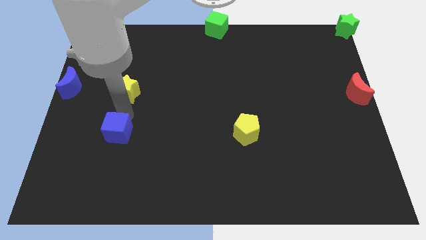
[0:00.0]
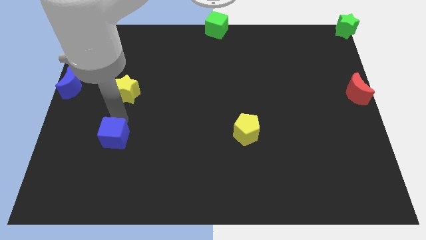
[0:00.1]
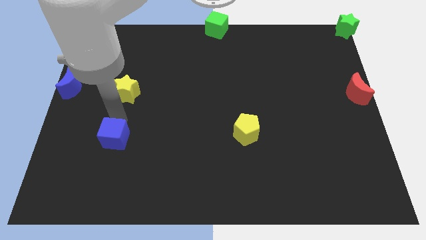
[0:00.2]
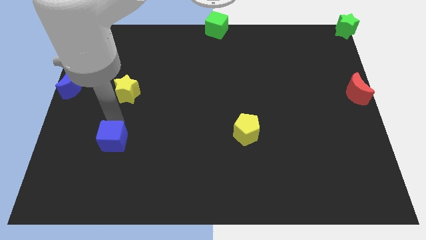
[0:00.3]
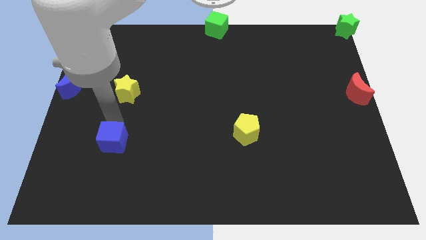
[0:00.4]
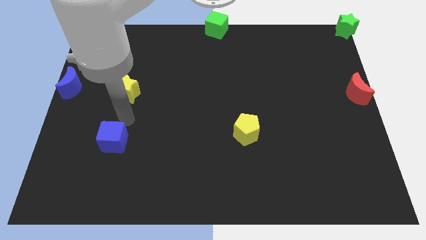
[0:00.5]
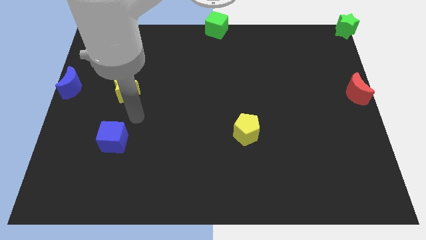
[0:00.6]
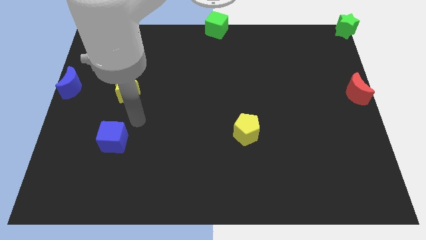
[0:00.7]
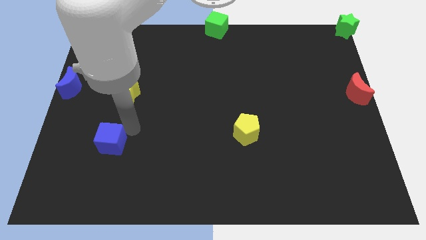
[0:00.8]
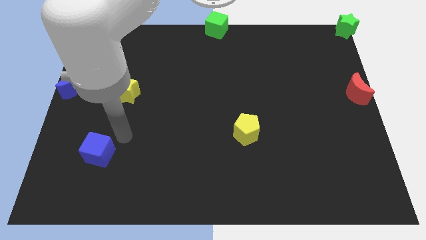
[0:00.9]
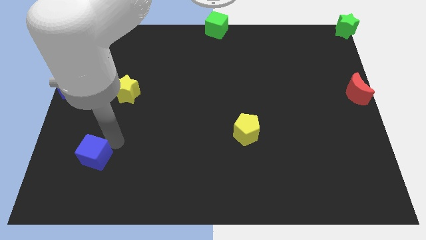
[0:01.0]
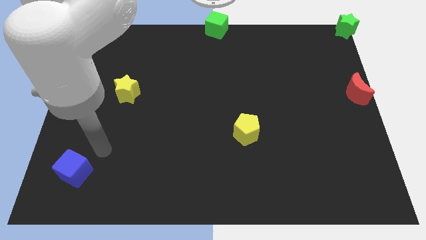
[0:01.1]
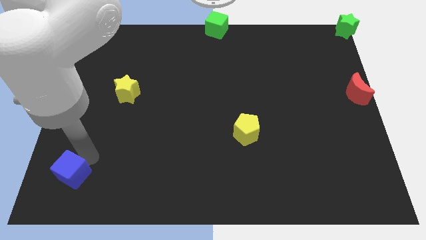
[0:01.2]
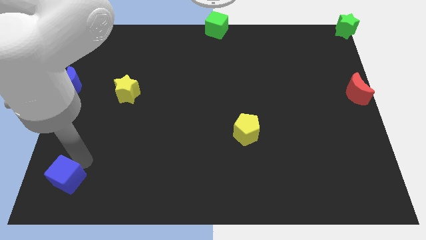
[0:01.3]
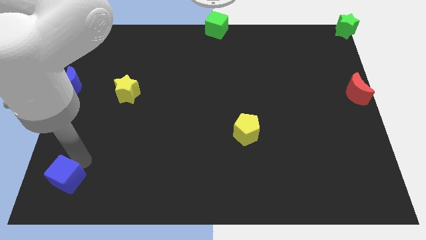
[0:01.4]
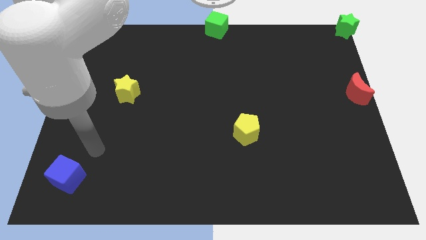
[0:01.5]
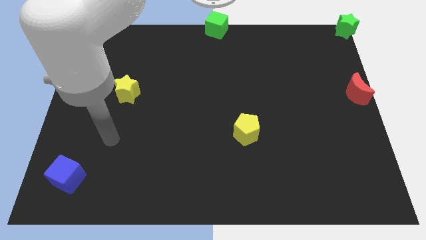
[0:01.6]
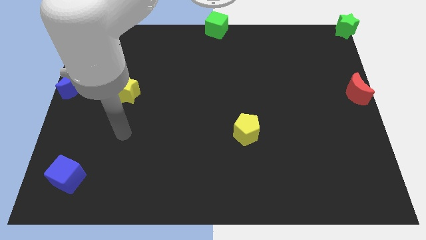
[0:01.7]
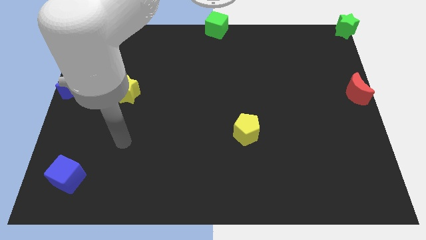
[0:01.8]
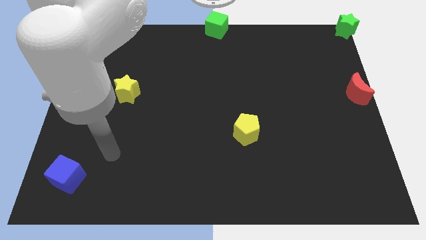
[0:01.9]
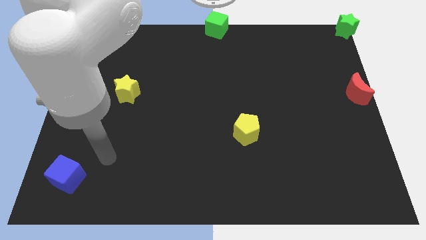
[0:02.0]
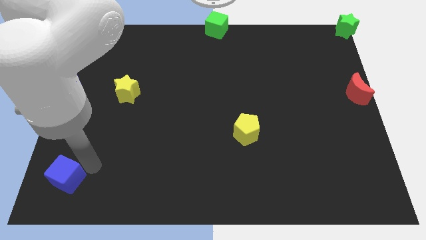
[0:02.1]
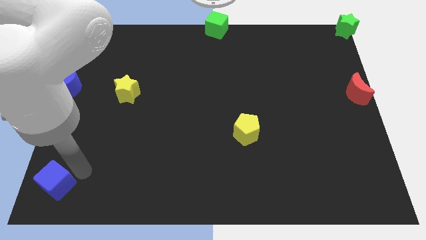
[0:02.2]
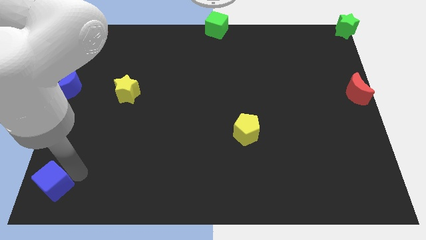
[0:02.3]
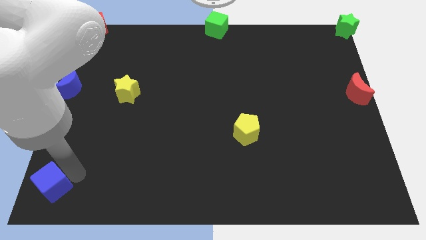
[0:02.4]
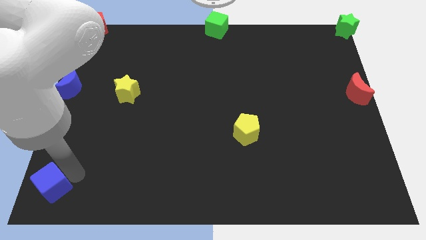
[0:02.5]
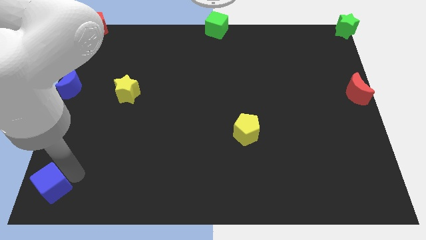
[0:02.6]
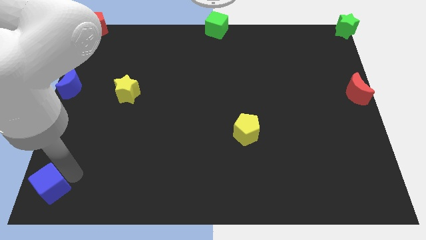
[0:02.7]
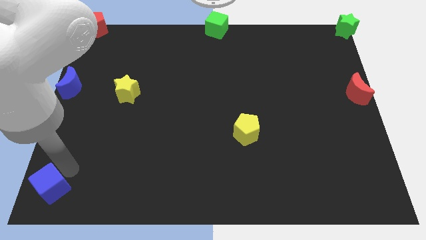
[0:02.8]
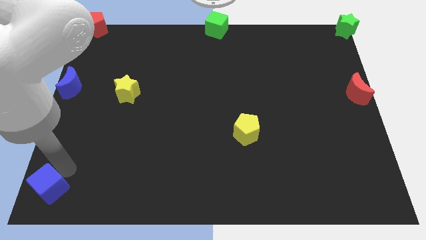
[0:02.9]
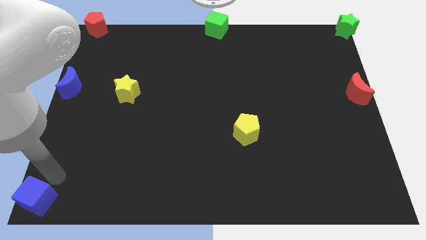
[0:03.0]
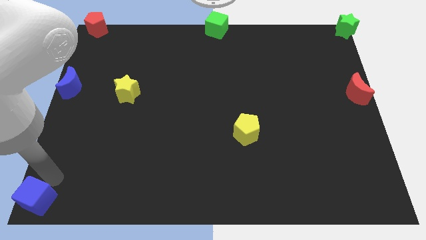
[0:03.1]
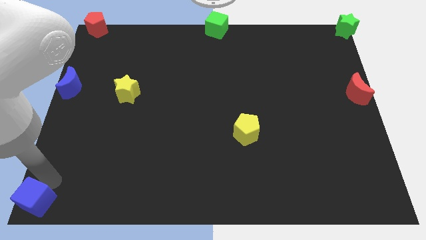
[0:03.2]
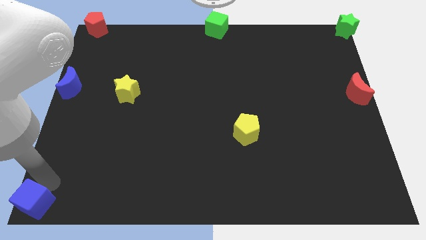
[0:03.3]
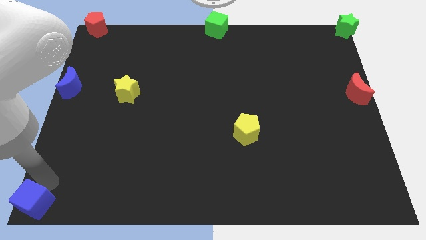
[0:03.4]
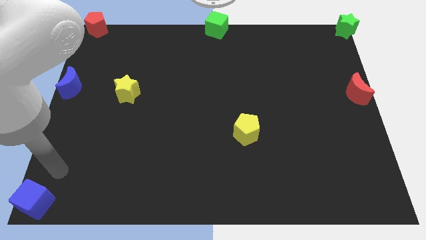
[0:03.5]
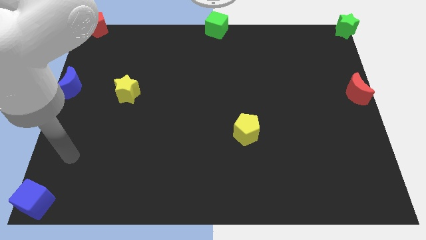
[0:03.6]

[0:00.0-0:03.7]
move the blue cube to the bottom left of the board

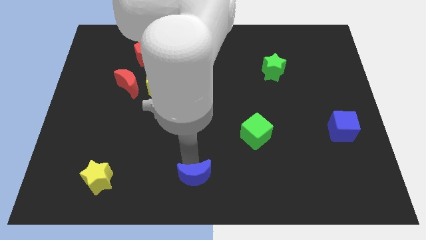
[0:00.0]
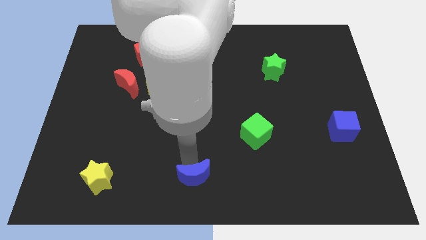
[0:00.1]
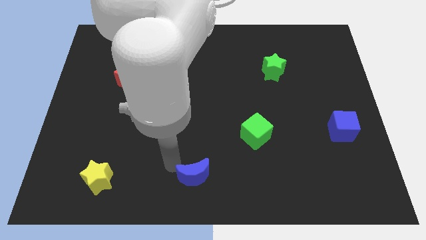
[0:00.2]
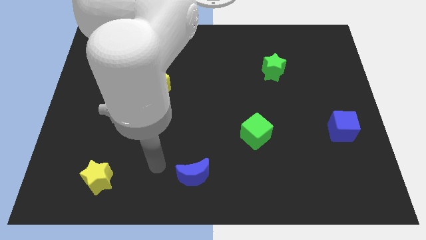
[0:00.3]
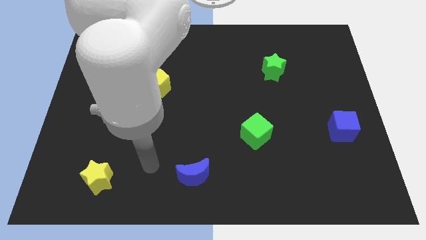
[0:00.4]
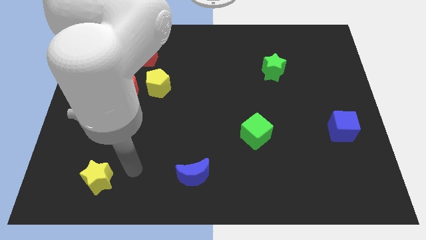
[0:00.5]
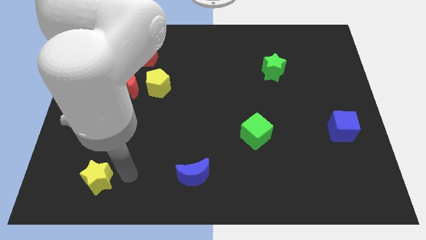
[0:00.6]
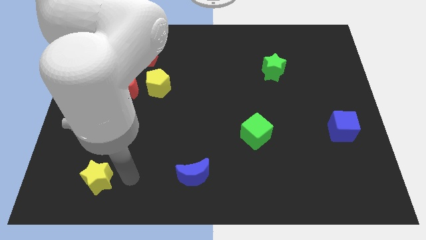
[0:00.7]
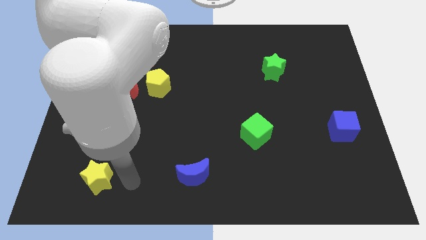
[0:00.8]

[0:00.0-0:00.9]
place your arm in between yellow star and blue moon

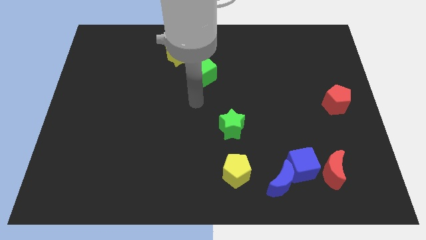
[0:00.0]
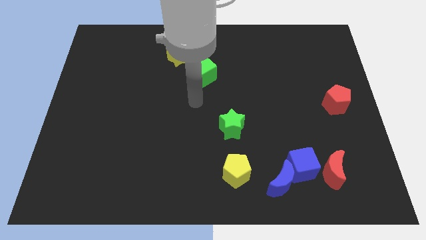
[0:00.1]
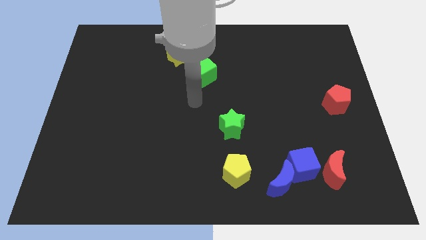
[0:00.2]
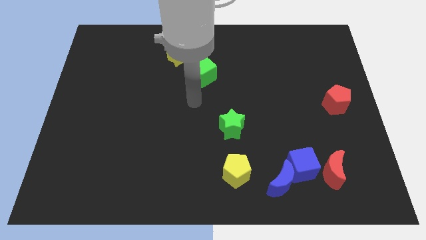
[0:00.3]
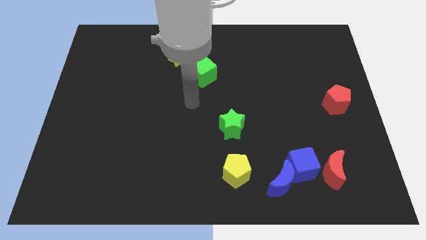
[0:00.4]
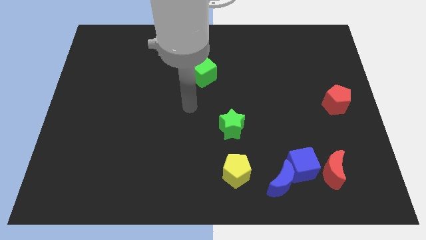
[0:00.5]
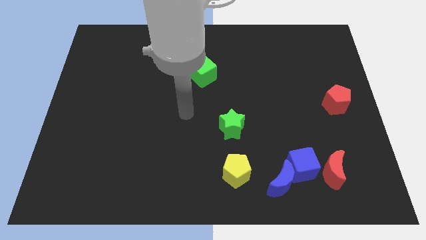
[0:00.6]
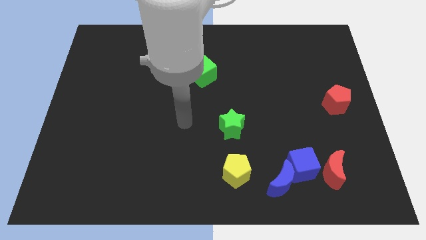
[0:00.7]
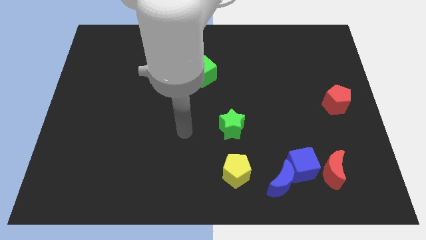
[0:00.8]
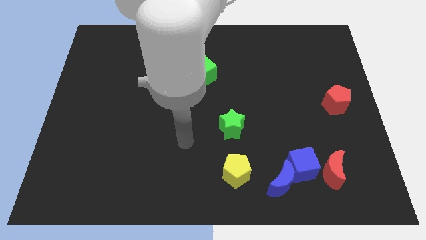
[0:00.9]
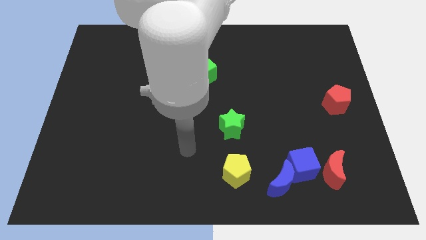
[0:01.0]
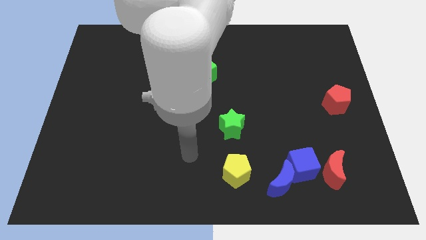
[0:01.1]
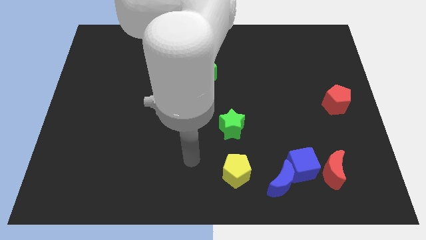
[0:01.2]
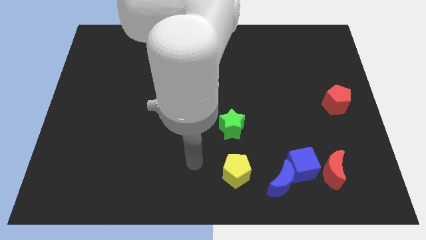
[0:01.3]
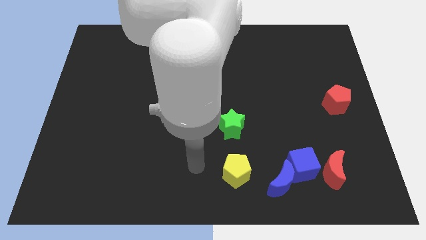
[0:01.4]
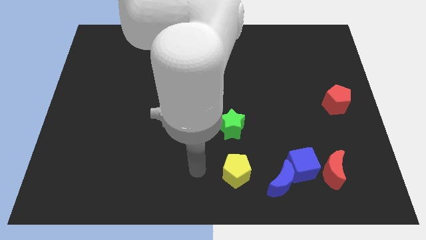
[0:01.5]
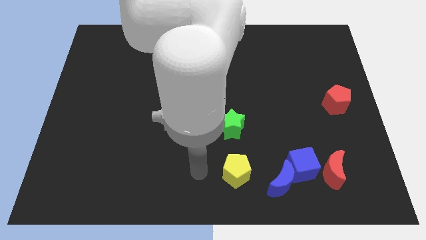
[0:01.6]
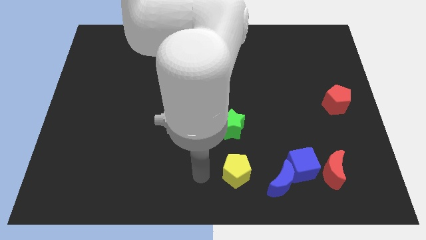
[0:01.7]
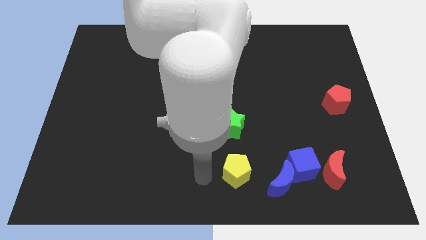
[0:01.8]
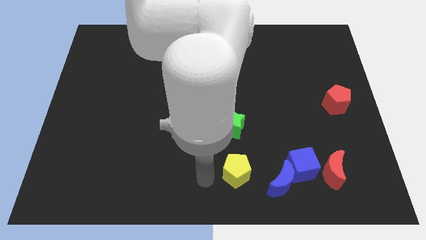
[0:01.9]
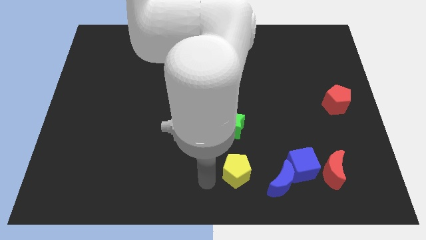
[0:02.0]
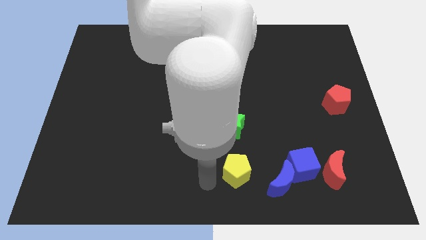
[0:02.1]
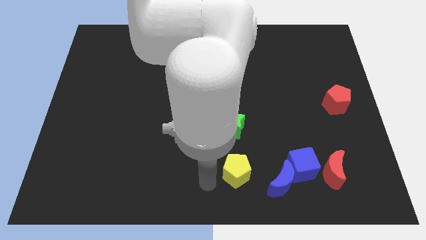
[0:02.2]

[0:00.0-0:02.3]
move the arm towards the bottom middle of the board

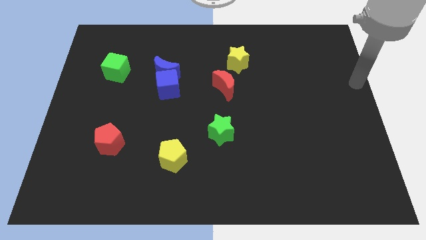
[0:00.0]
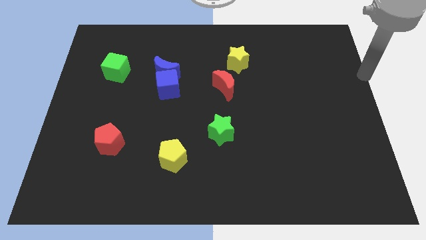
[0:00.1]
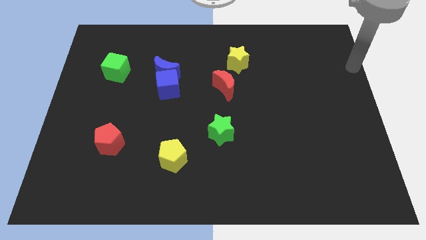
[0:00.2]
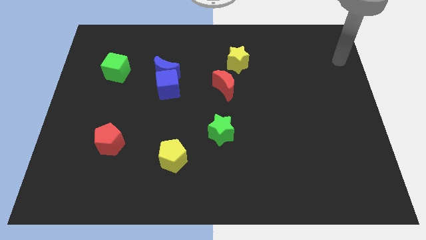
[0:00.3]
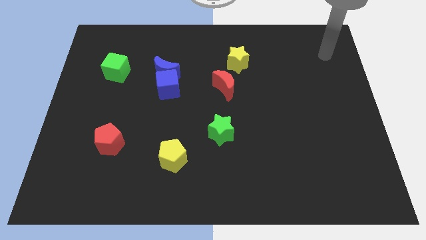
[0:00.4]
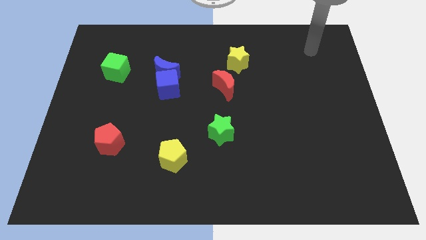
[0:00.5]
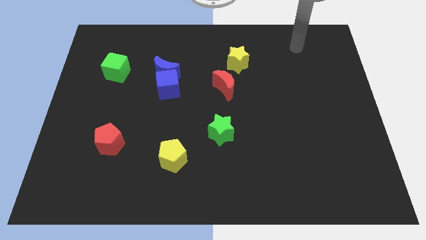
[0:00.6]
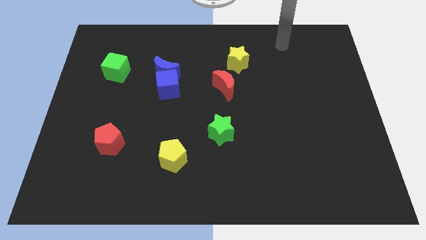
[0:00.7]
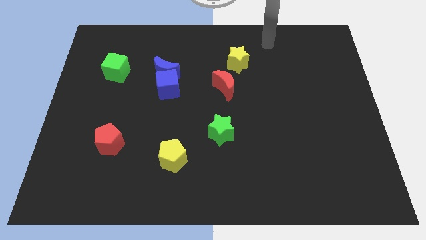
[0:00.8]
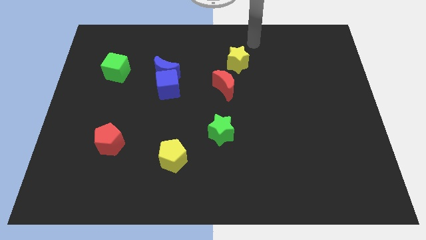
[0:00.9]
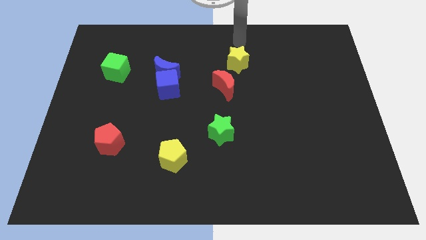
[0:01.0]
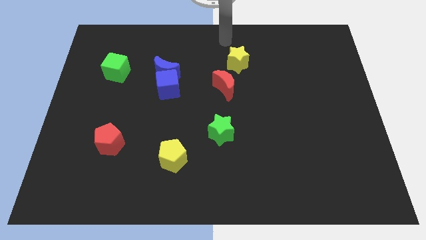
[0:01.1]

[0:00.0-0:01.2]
place the arm close to the yellow star

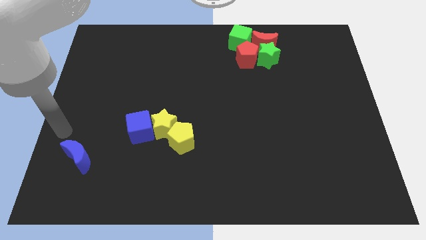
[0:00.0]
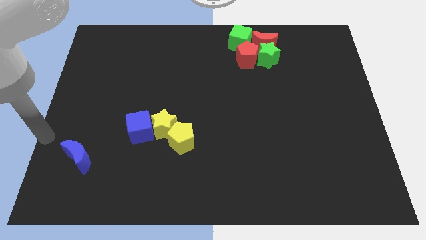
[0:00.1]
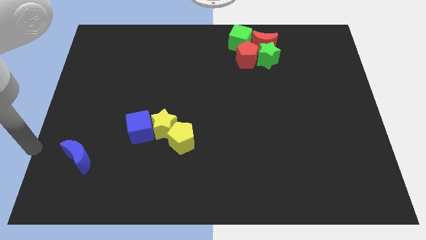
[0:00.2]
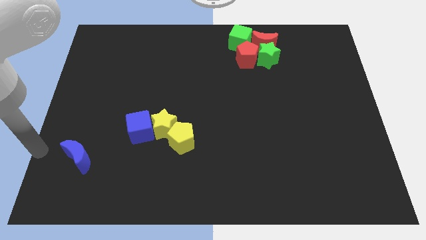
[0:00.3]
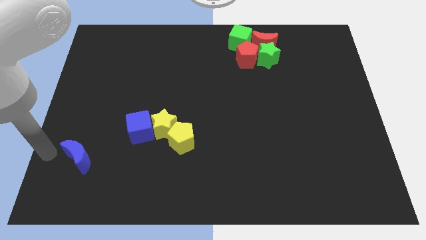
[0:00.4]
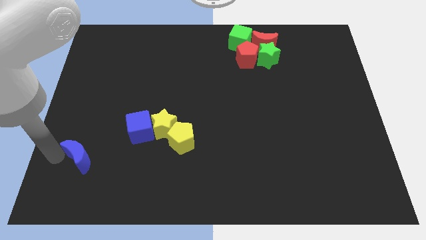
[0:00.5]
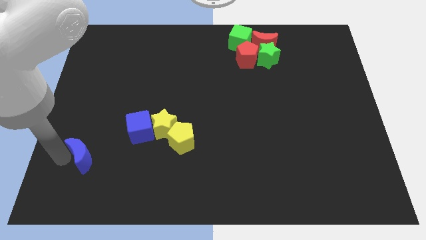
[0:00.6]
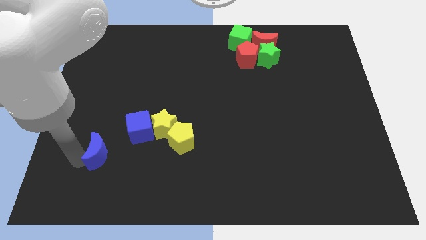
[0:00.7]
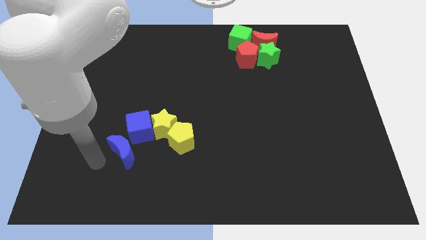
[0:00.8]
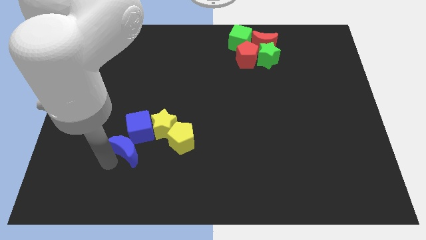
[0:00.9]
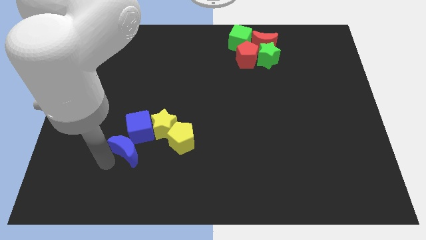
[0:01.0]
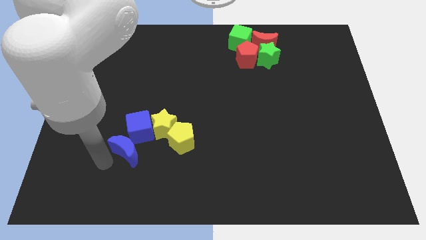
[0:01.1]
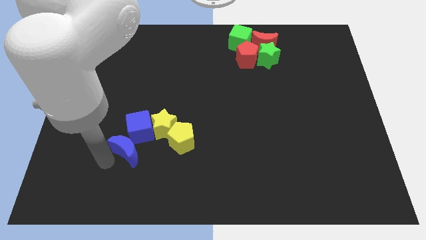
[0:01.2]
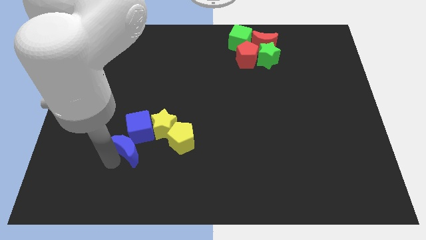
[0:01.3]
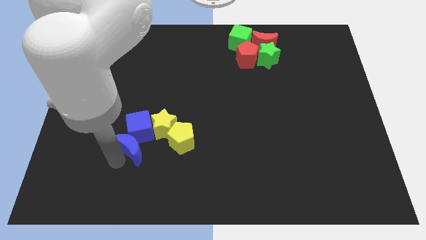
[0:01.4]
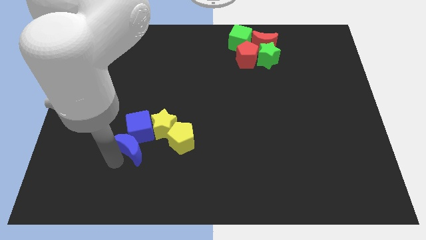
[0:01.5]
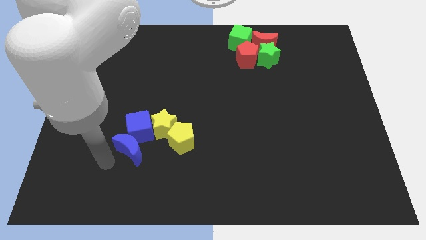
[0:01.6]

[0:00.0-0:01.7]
move blue crescent into the blue cube at bottom left
